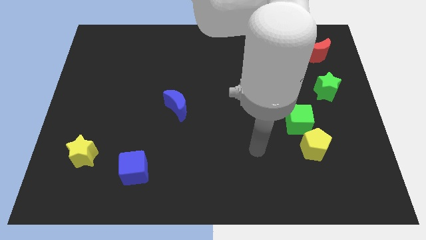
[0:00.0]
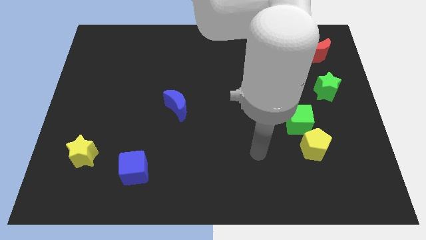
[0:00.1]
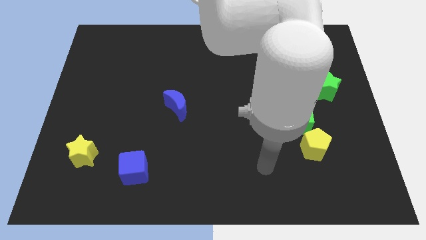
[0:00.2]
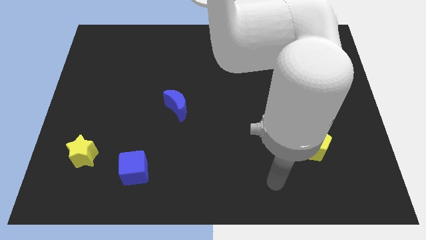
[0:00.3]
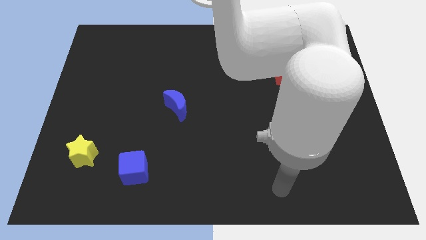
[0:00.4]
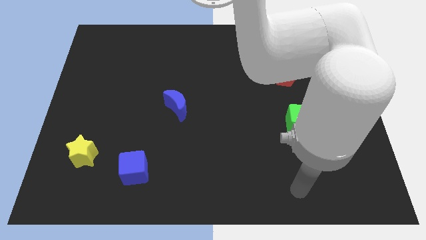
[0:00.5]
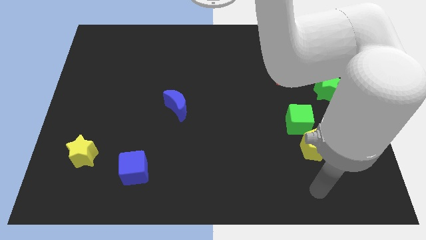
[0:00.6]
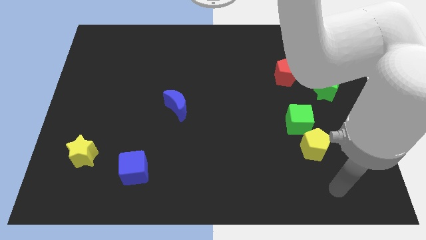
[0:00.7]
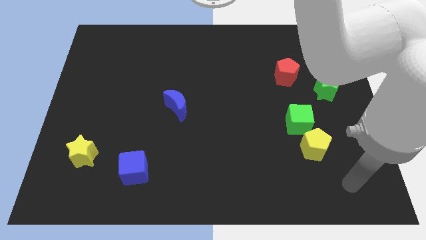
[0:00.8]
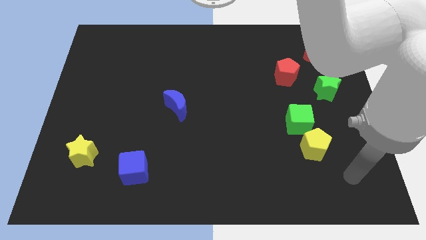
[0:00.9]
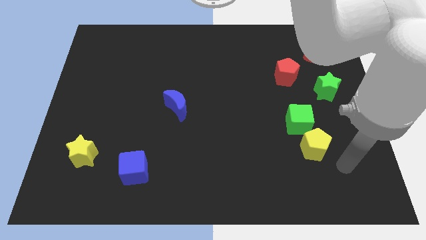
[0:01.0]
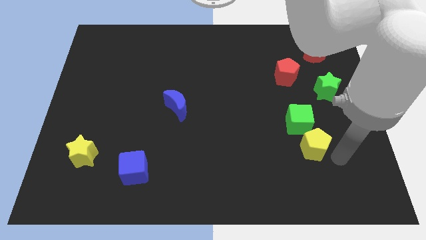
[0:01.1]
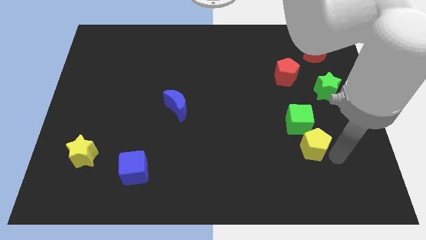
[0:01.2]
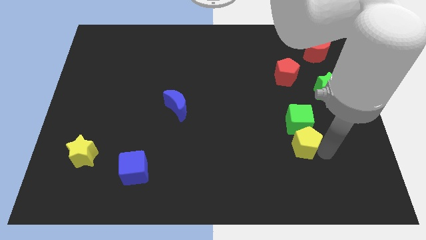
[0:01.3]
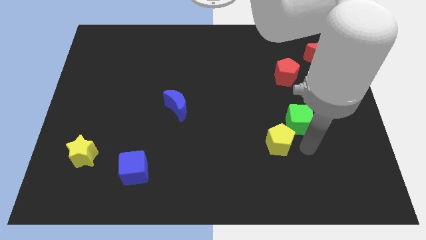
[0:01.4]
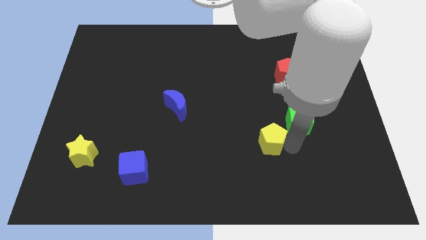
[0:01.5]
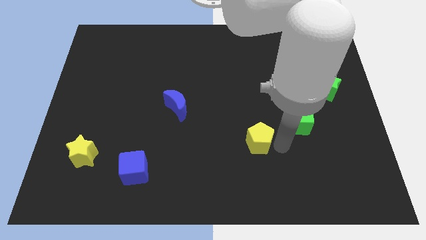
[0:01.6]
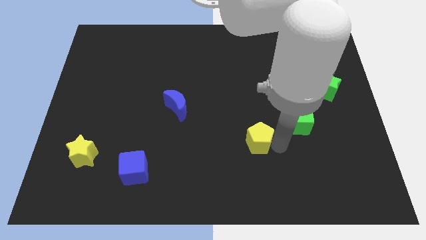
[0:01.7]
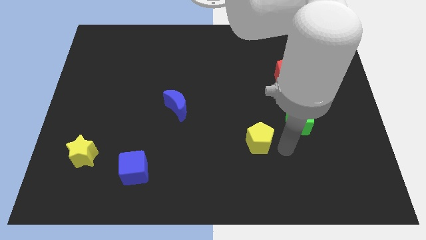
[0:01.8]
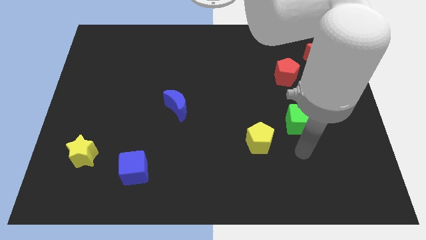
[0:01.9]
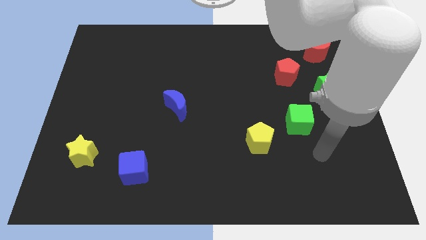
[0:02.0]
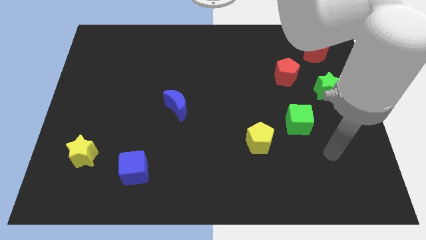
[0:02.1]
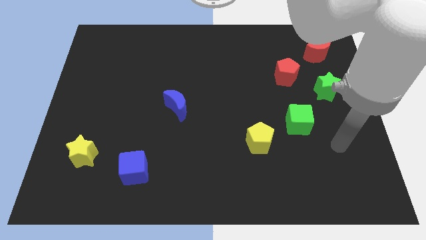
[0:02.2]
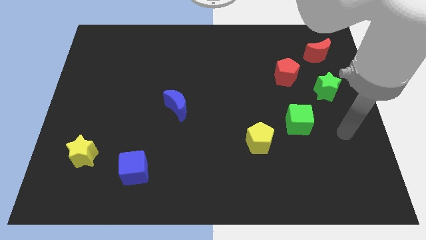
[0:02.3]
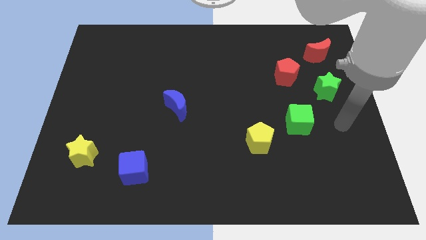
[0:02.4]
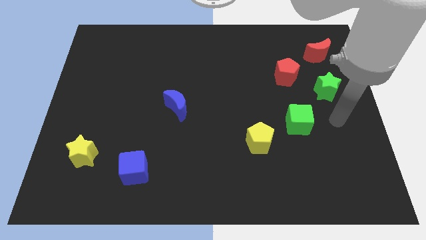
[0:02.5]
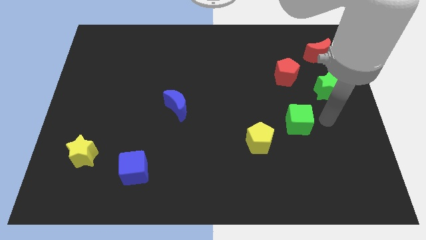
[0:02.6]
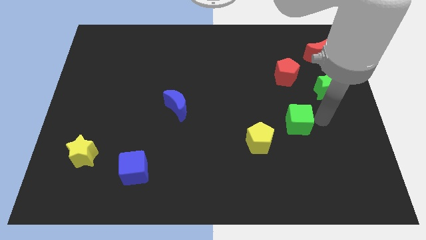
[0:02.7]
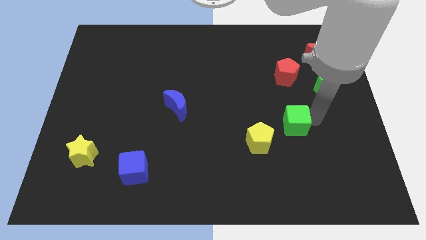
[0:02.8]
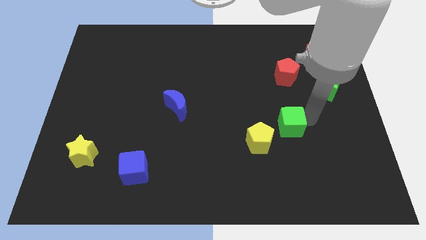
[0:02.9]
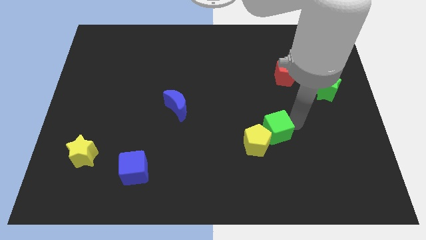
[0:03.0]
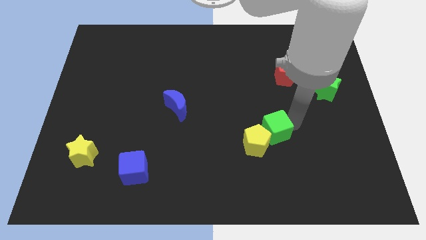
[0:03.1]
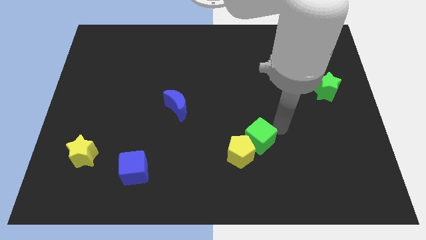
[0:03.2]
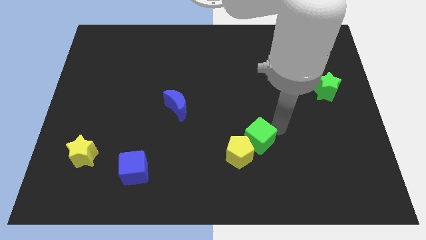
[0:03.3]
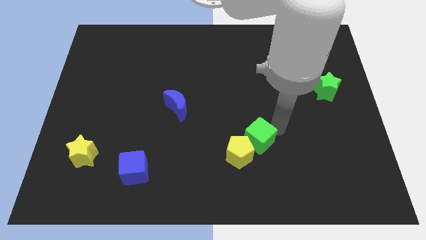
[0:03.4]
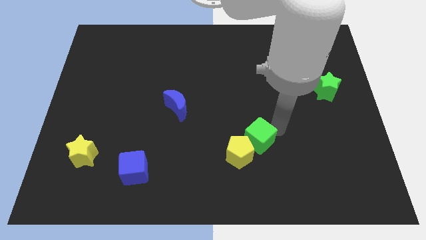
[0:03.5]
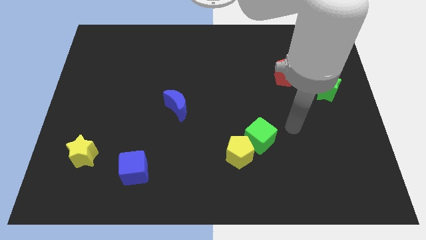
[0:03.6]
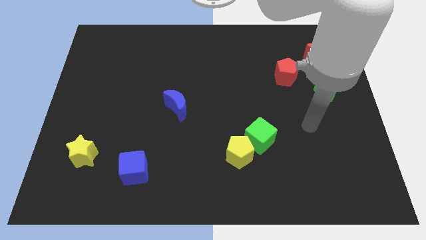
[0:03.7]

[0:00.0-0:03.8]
push the green cube into the yellow pentagon

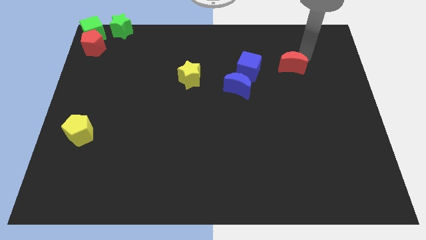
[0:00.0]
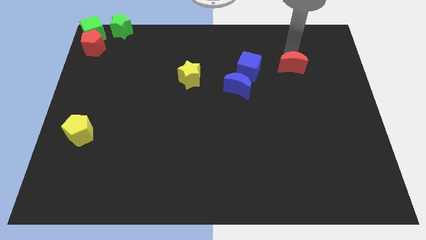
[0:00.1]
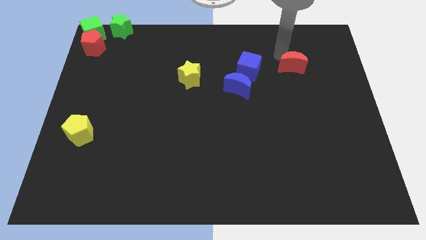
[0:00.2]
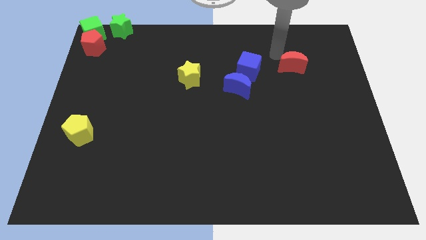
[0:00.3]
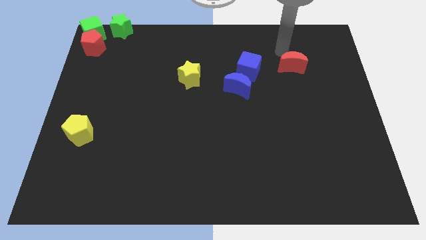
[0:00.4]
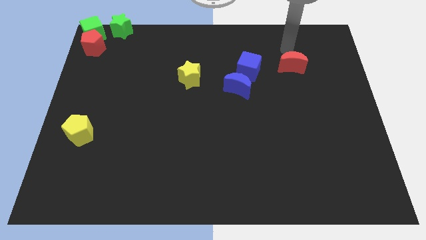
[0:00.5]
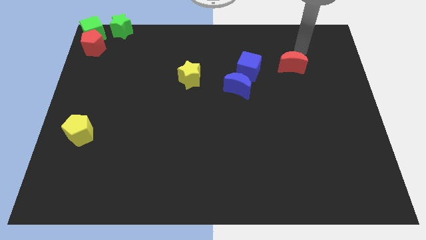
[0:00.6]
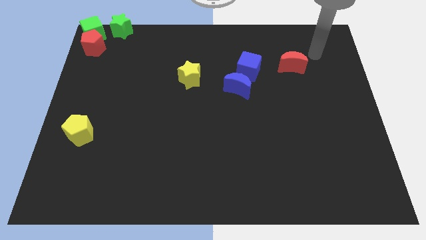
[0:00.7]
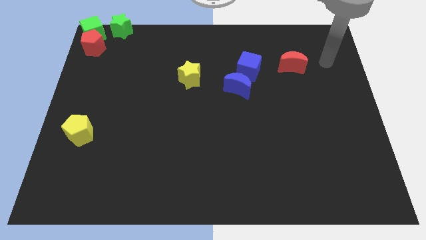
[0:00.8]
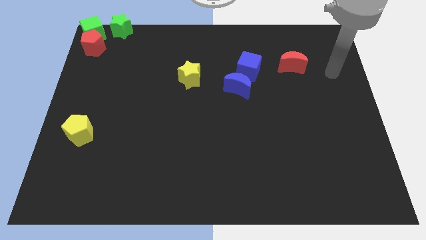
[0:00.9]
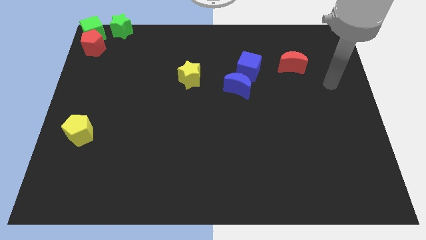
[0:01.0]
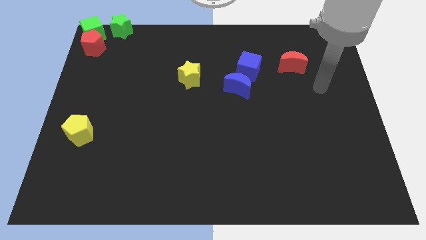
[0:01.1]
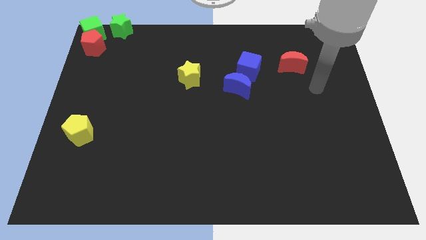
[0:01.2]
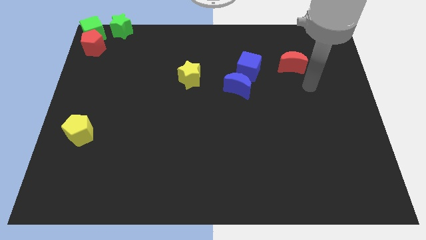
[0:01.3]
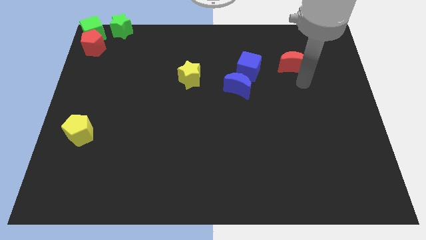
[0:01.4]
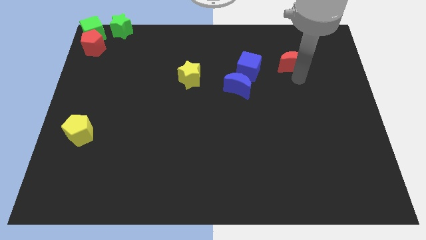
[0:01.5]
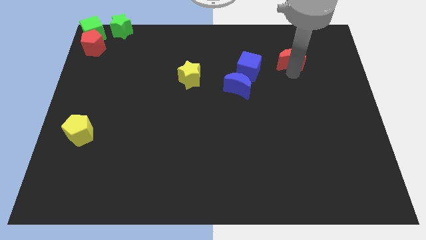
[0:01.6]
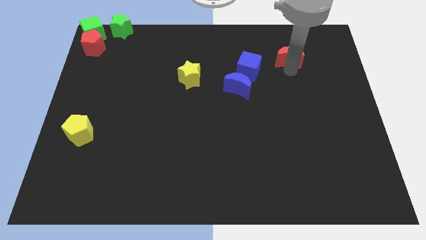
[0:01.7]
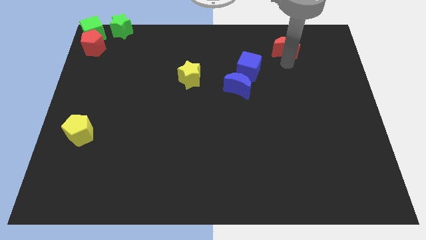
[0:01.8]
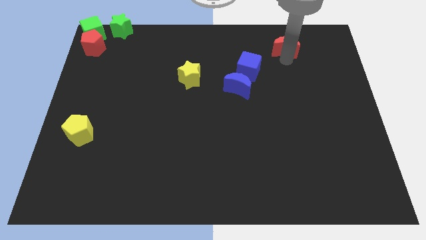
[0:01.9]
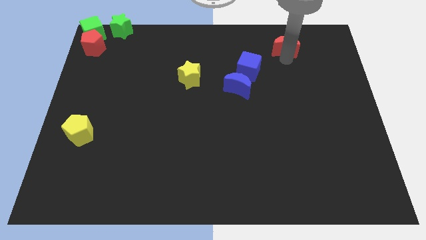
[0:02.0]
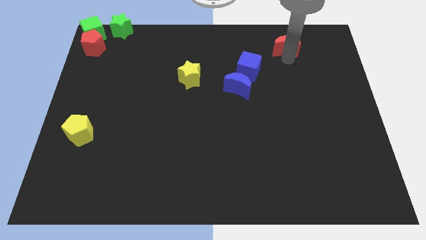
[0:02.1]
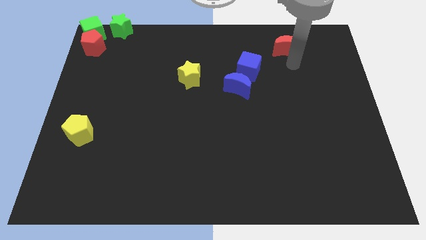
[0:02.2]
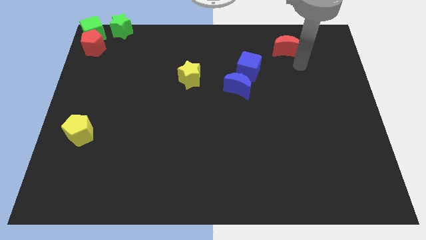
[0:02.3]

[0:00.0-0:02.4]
slightly push the red moon upwards

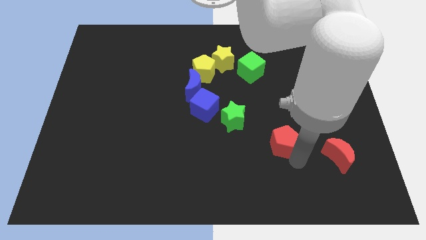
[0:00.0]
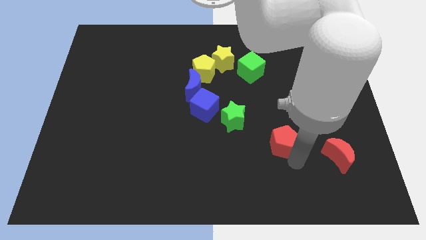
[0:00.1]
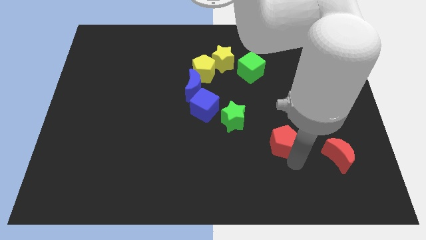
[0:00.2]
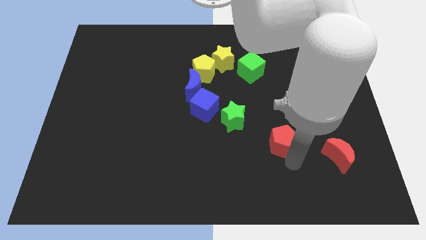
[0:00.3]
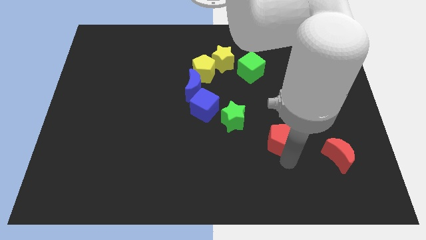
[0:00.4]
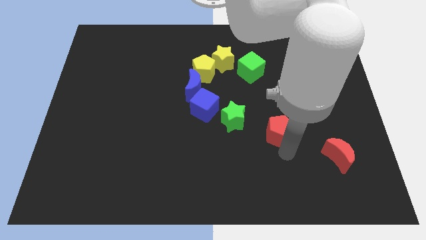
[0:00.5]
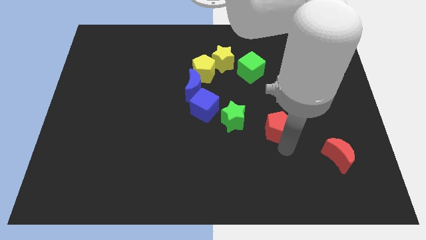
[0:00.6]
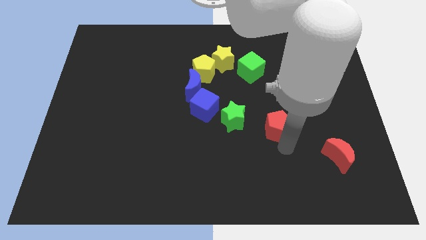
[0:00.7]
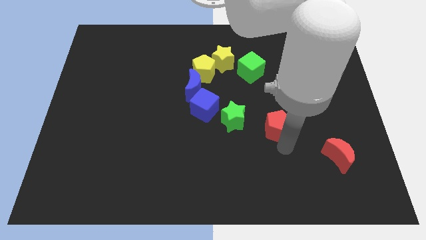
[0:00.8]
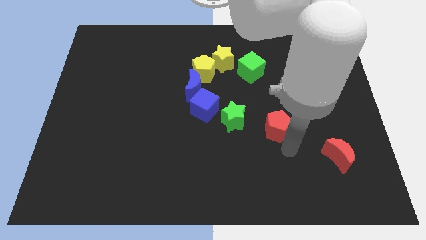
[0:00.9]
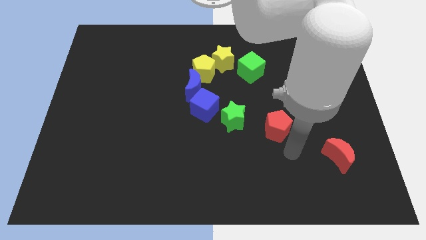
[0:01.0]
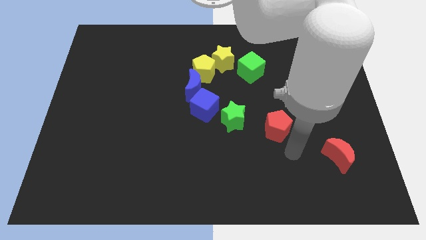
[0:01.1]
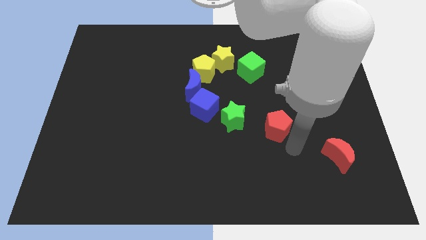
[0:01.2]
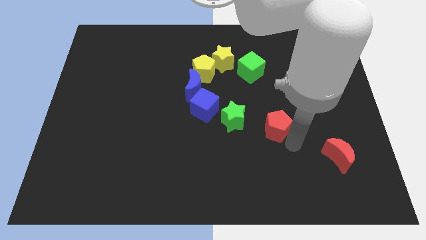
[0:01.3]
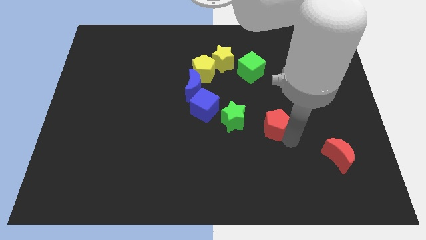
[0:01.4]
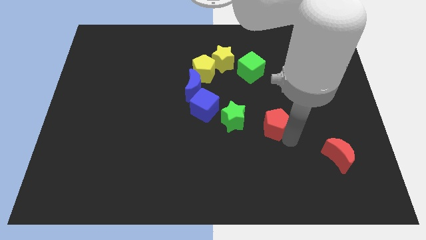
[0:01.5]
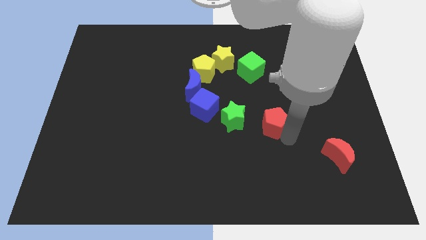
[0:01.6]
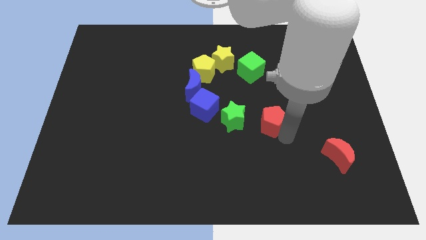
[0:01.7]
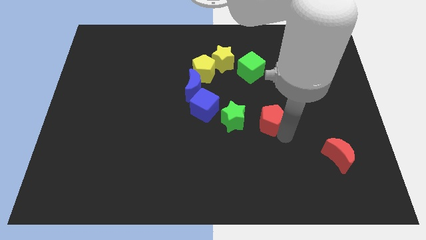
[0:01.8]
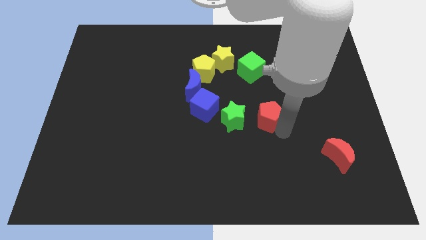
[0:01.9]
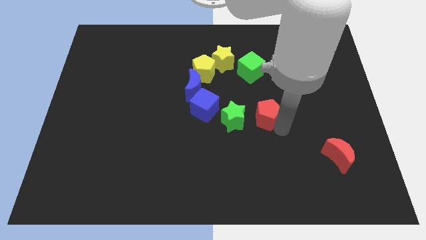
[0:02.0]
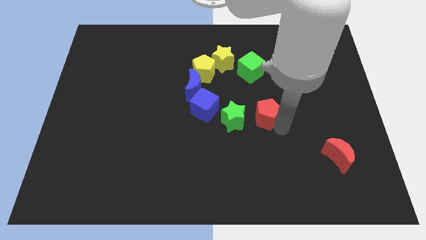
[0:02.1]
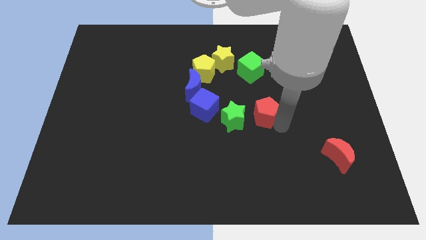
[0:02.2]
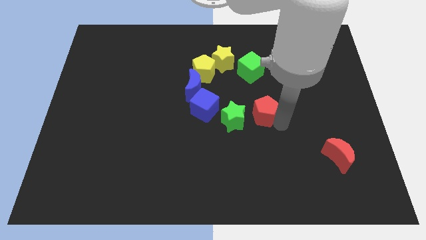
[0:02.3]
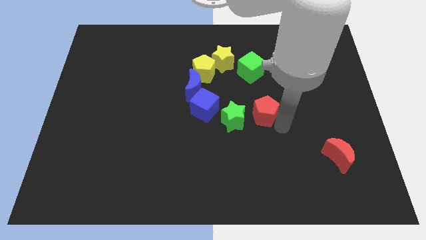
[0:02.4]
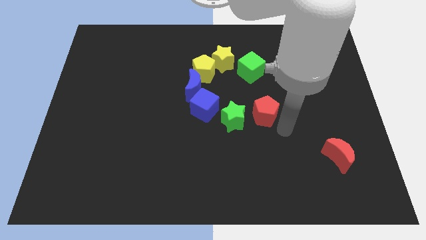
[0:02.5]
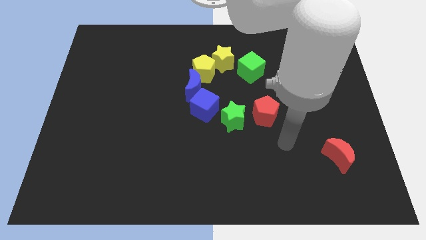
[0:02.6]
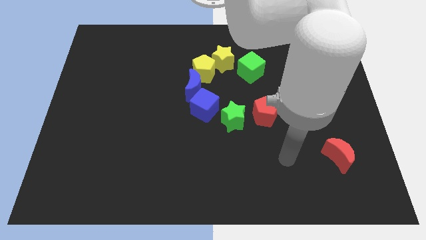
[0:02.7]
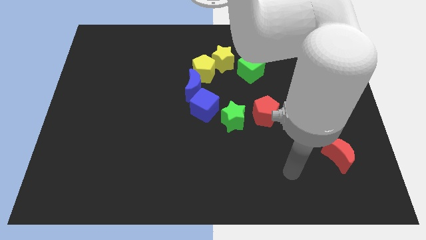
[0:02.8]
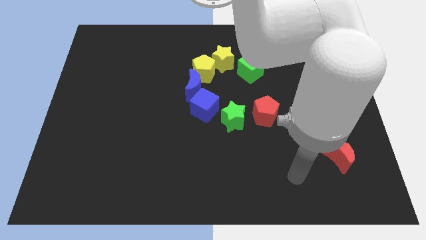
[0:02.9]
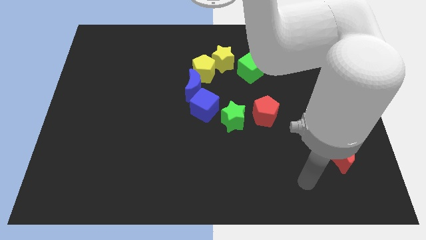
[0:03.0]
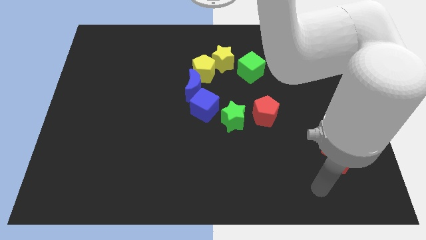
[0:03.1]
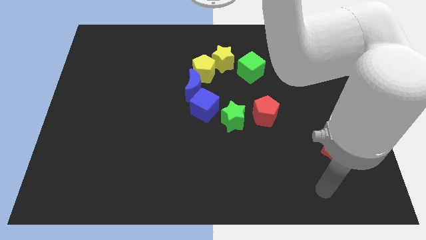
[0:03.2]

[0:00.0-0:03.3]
put the red pentagon right to the green star
